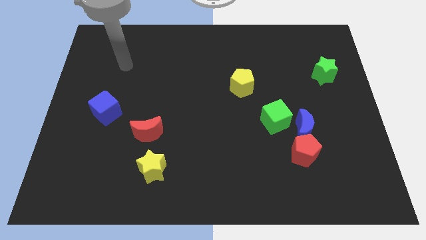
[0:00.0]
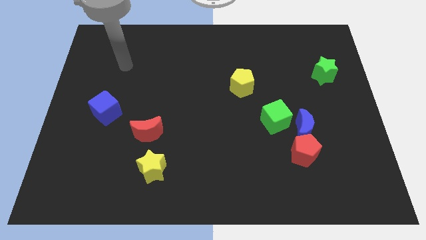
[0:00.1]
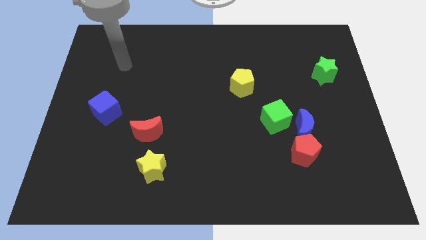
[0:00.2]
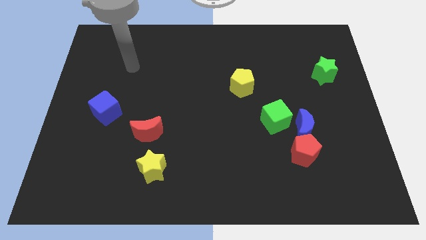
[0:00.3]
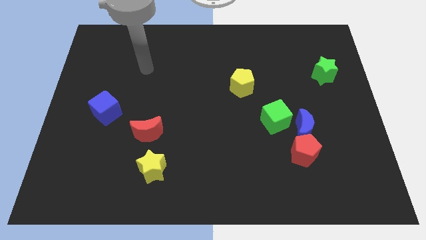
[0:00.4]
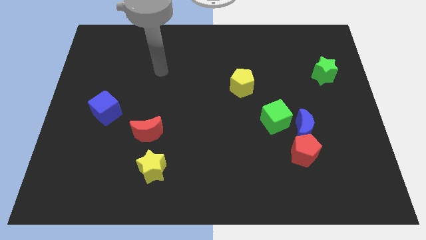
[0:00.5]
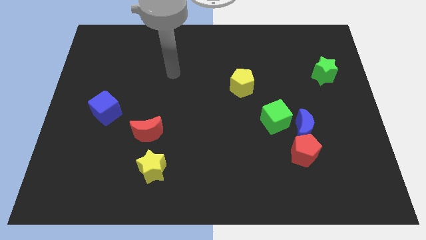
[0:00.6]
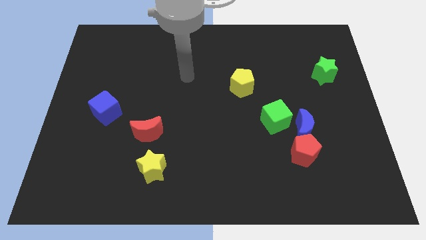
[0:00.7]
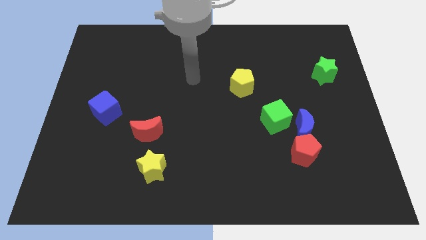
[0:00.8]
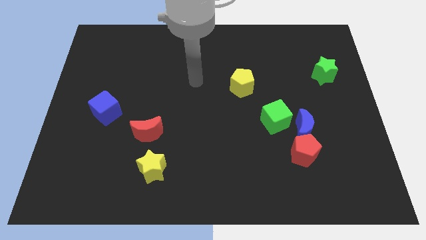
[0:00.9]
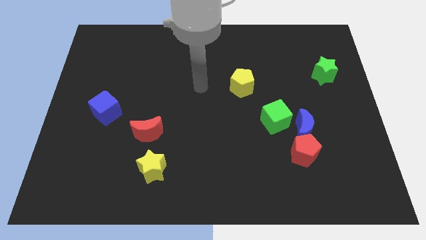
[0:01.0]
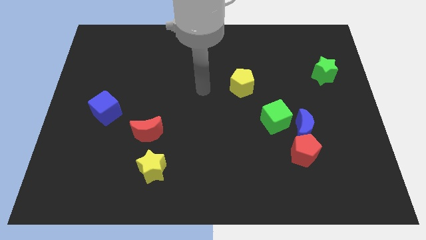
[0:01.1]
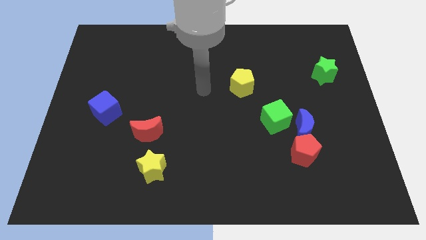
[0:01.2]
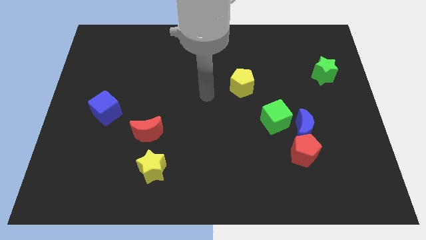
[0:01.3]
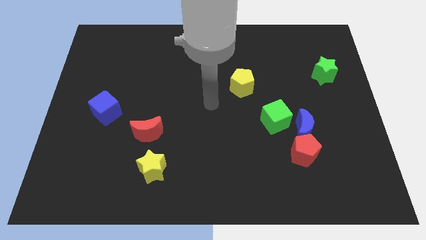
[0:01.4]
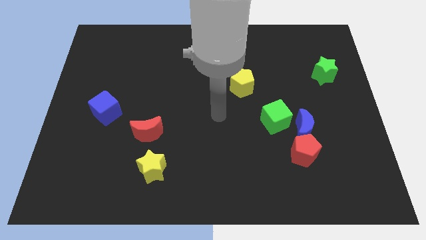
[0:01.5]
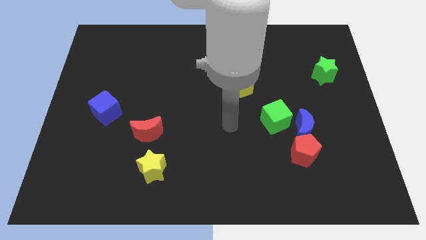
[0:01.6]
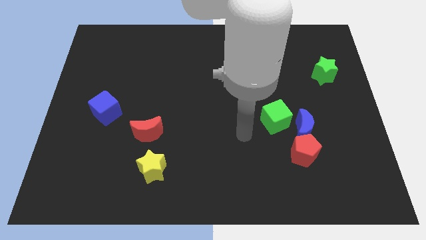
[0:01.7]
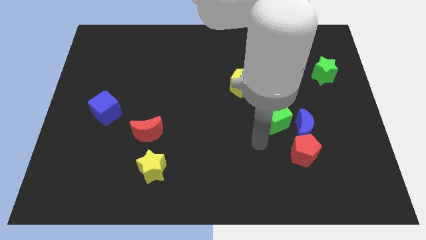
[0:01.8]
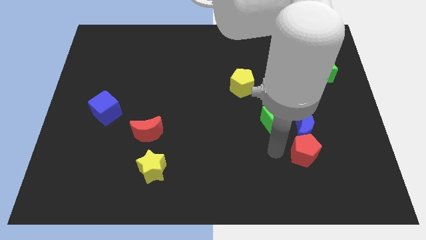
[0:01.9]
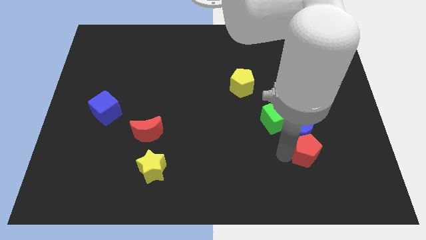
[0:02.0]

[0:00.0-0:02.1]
touch the left side of the red pentagon

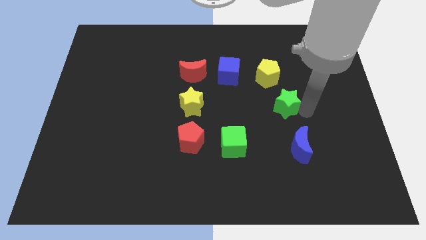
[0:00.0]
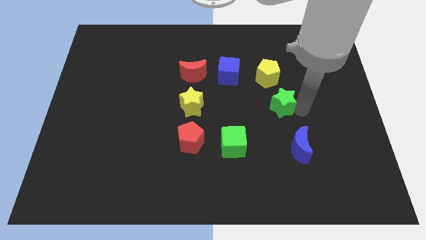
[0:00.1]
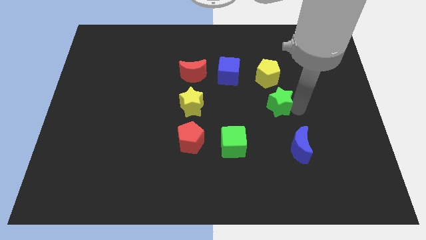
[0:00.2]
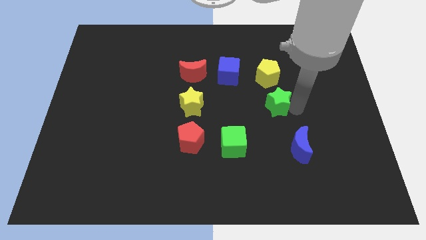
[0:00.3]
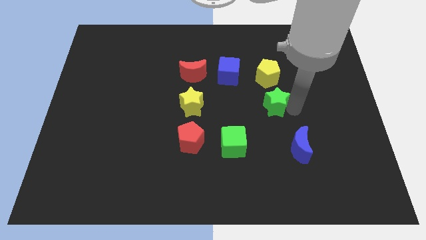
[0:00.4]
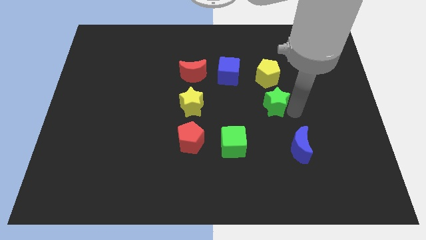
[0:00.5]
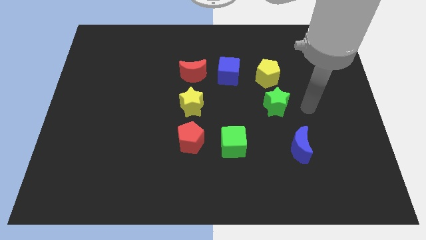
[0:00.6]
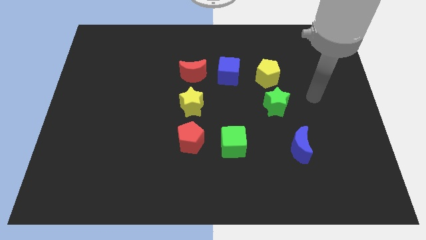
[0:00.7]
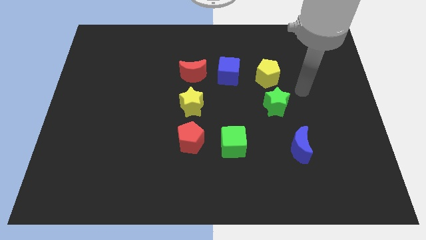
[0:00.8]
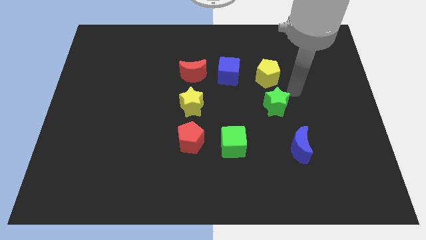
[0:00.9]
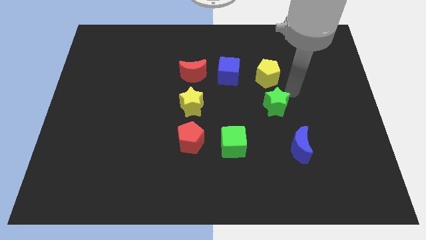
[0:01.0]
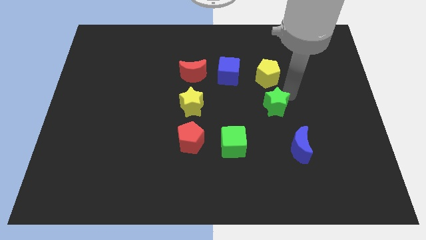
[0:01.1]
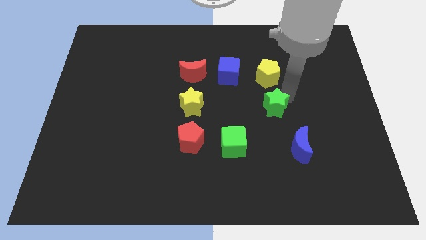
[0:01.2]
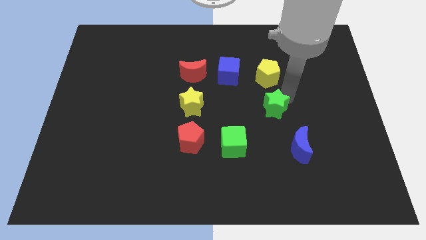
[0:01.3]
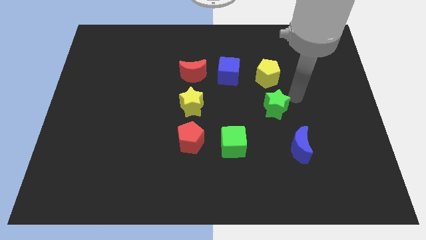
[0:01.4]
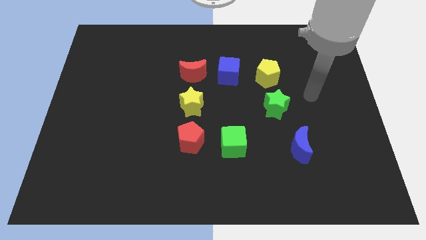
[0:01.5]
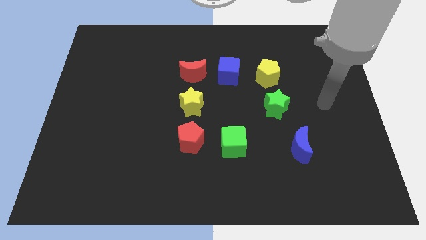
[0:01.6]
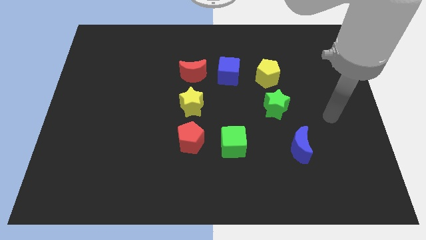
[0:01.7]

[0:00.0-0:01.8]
move the green star below the yellow pentagon

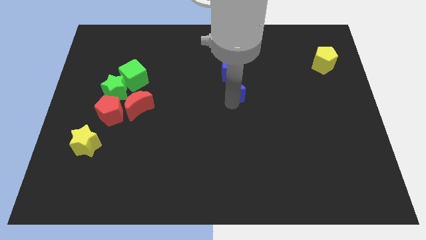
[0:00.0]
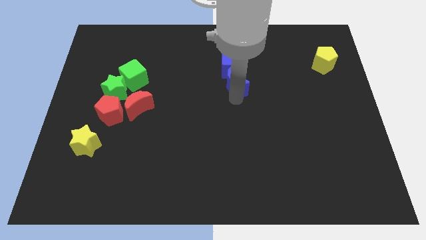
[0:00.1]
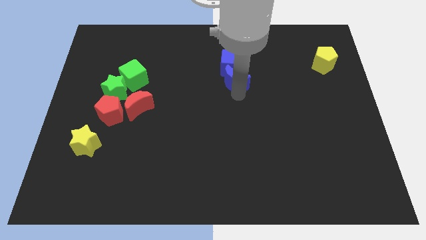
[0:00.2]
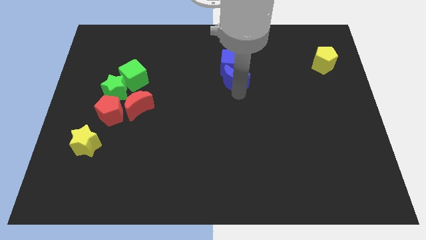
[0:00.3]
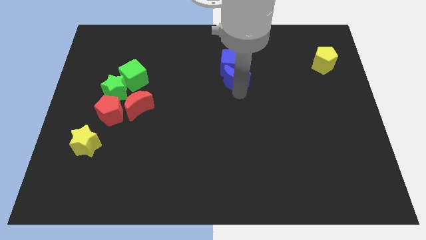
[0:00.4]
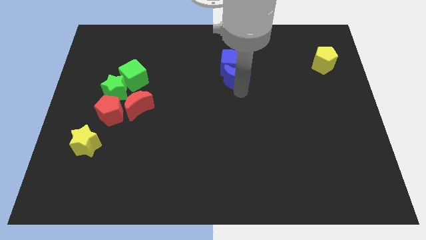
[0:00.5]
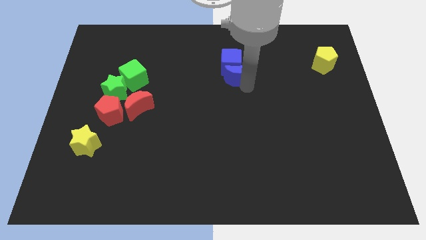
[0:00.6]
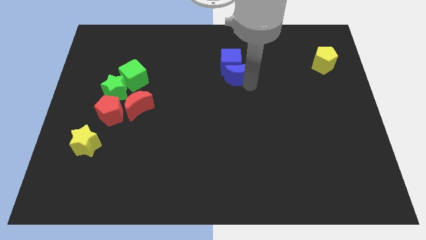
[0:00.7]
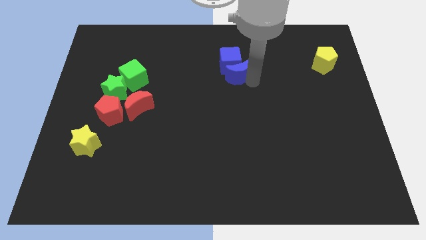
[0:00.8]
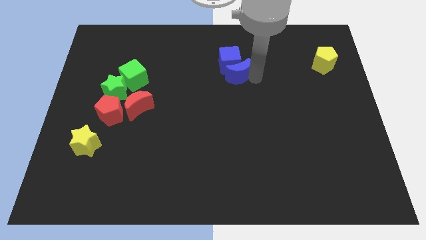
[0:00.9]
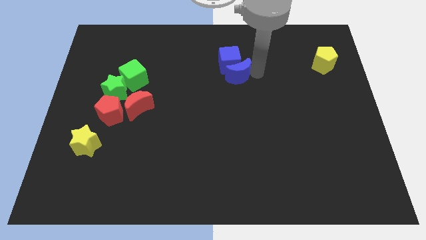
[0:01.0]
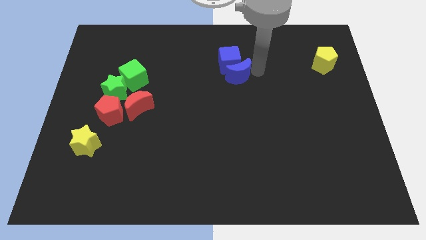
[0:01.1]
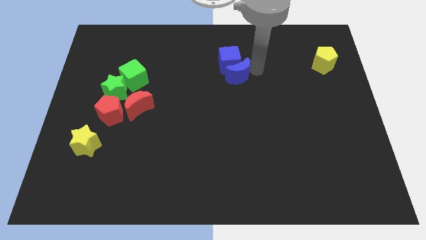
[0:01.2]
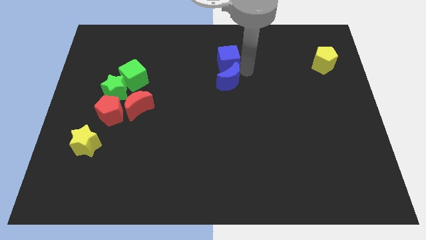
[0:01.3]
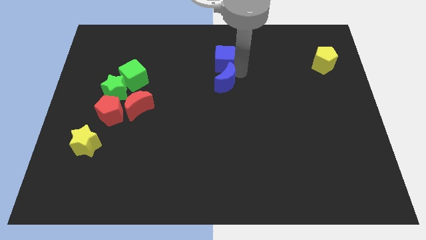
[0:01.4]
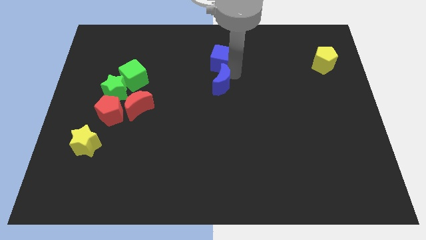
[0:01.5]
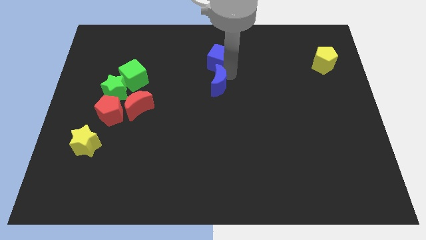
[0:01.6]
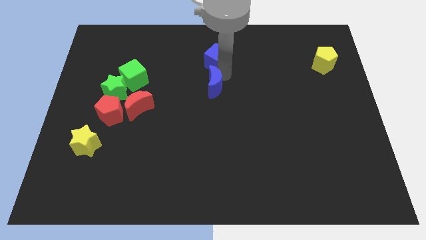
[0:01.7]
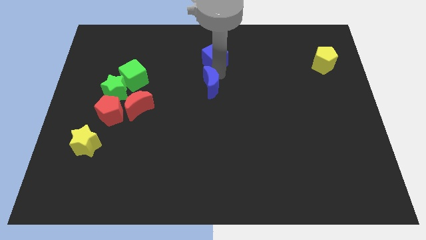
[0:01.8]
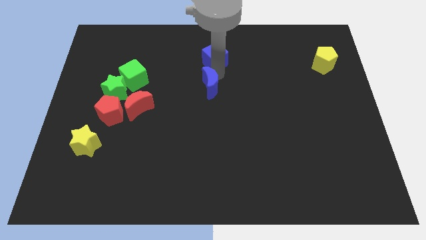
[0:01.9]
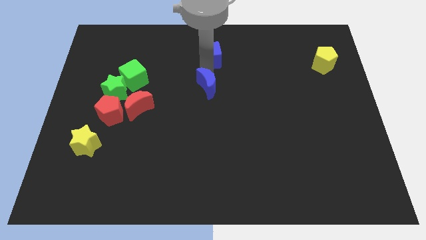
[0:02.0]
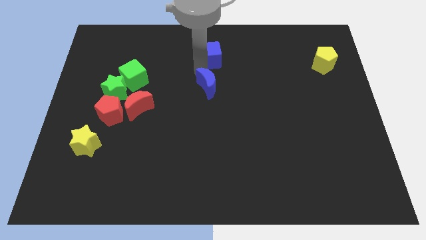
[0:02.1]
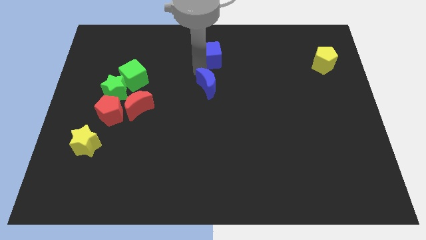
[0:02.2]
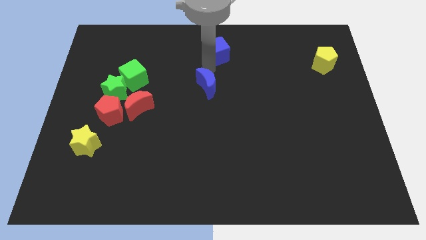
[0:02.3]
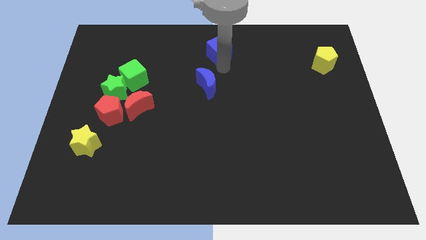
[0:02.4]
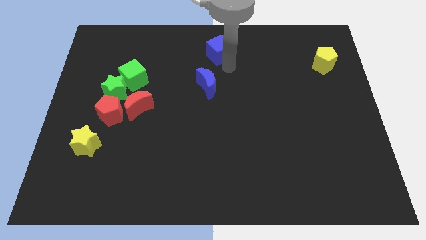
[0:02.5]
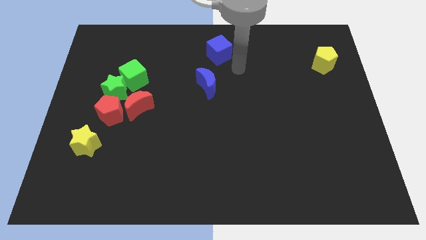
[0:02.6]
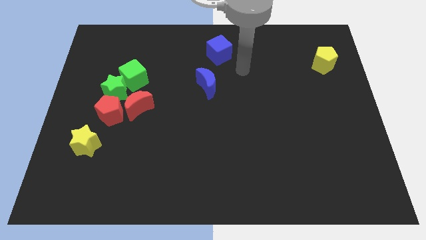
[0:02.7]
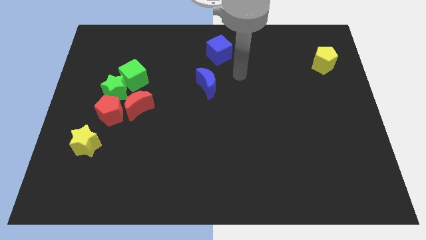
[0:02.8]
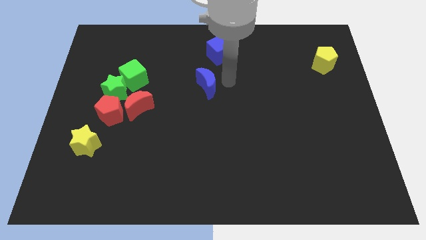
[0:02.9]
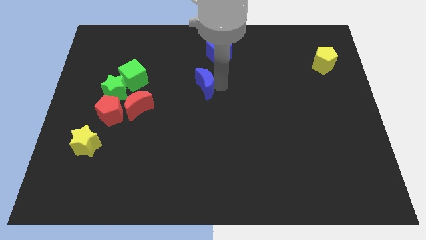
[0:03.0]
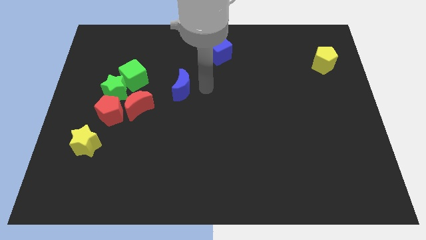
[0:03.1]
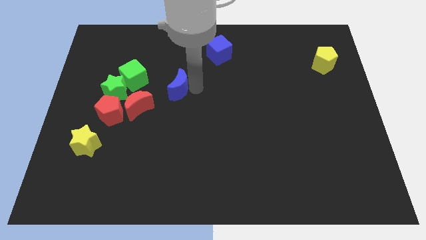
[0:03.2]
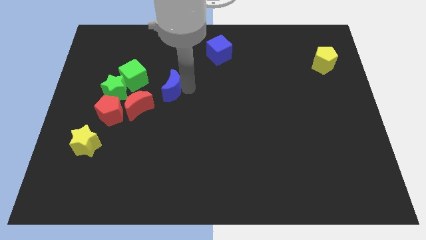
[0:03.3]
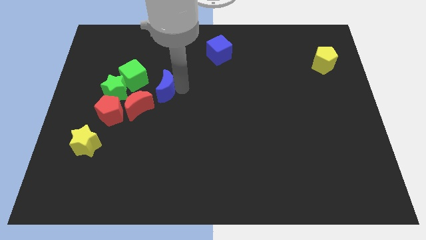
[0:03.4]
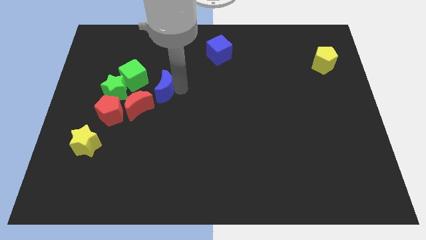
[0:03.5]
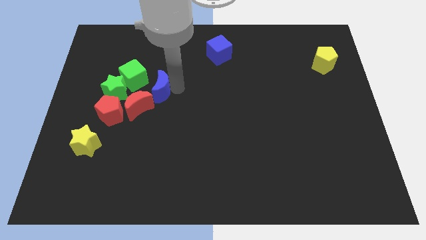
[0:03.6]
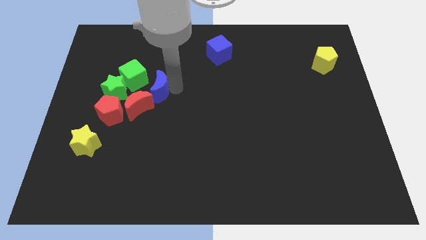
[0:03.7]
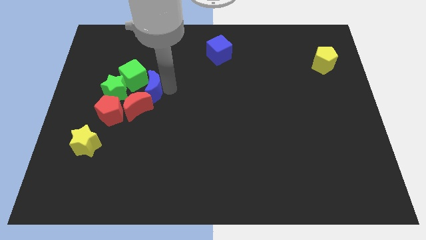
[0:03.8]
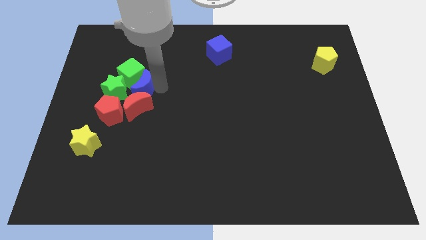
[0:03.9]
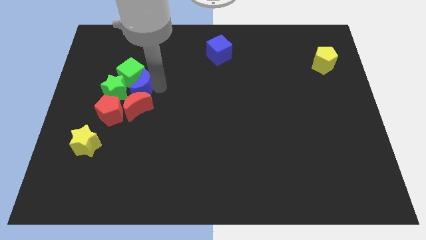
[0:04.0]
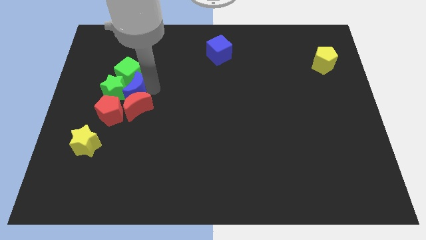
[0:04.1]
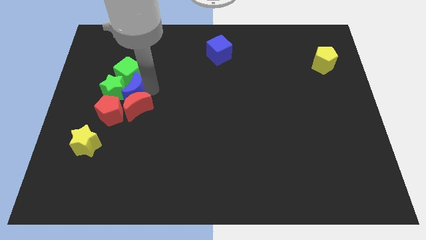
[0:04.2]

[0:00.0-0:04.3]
move the crescent into the group of blocks

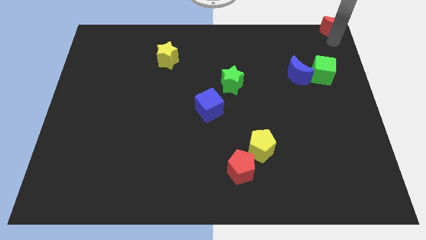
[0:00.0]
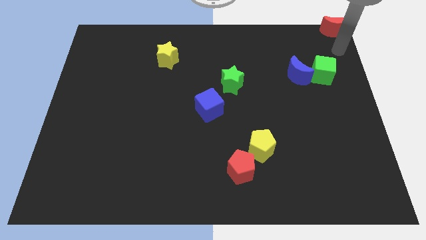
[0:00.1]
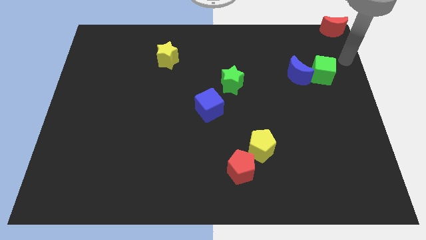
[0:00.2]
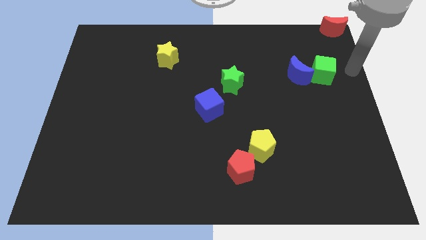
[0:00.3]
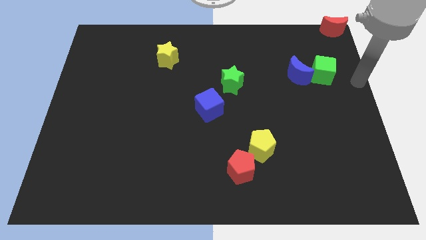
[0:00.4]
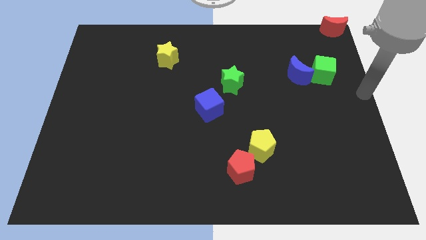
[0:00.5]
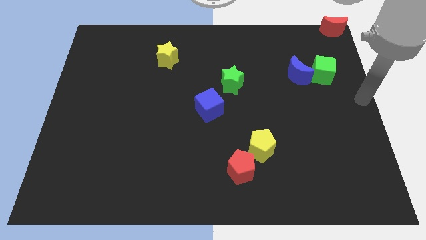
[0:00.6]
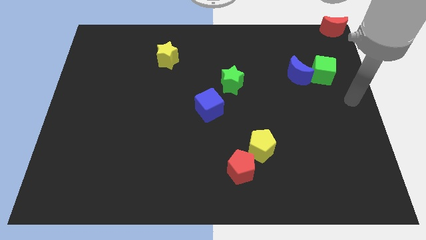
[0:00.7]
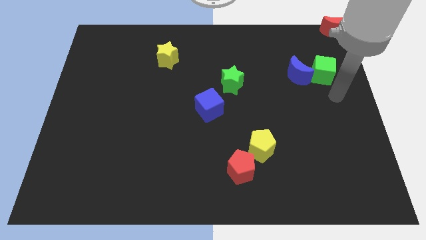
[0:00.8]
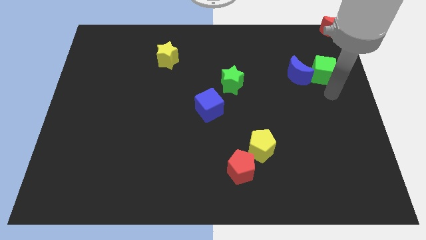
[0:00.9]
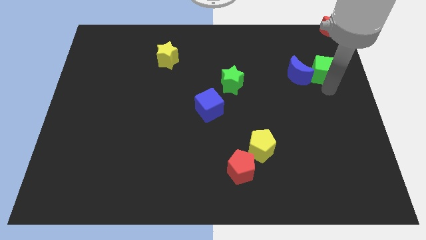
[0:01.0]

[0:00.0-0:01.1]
place your arm vertically below the green cube
